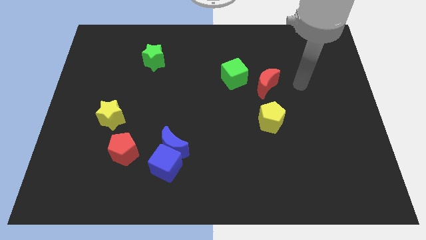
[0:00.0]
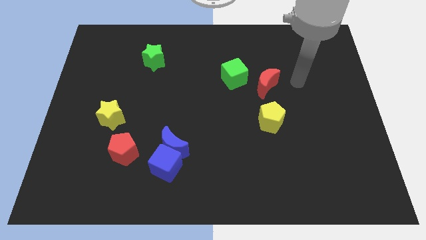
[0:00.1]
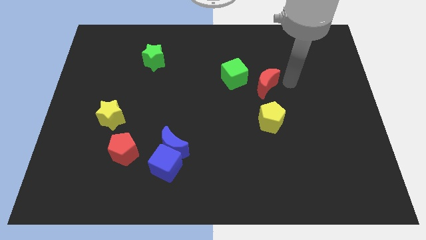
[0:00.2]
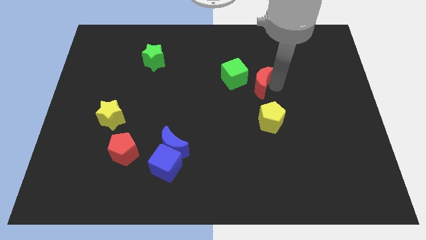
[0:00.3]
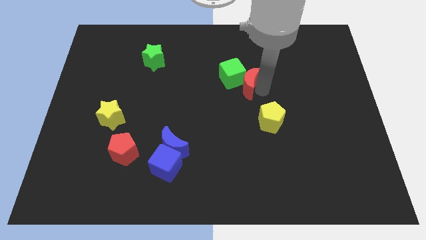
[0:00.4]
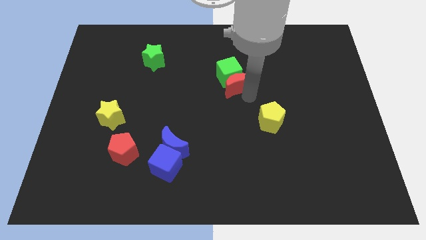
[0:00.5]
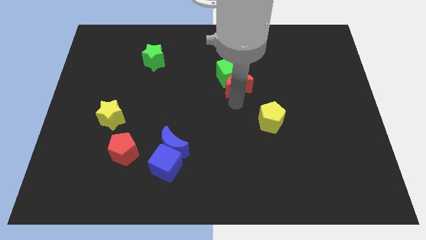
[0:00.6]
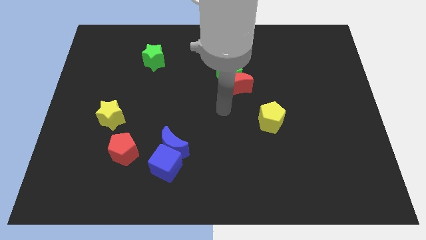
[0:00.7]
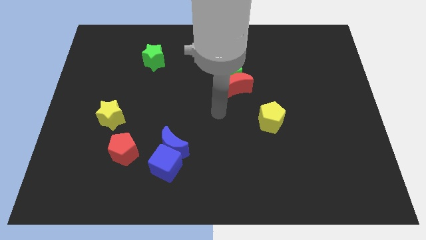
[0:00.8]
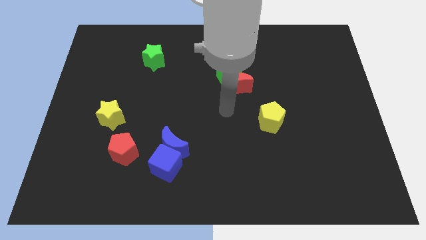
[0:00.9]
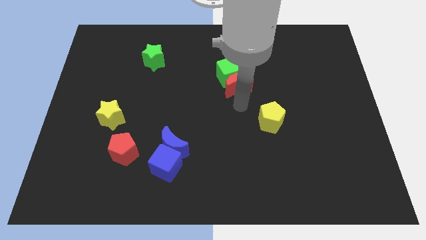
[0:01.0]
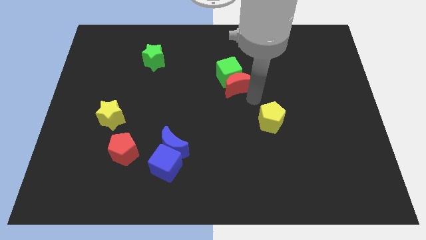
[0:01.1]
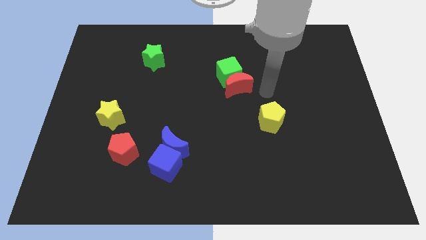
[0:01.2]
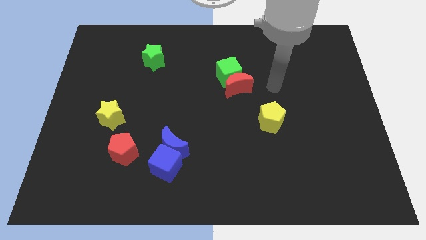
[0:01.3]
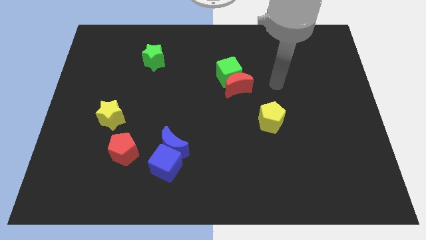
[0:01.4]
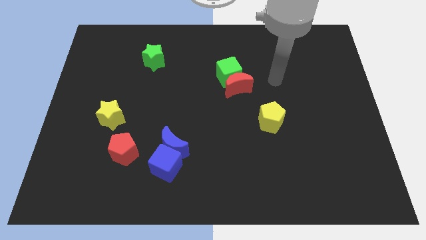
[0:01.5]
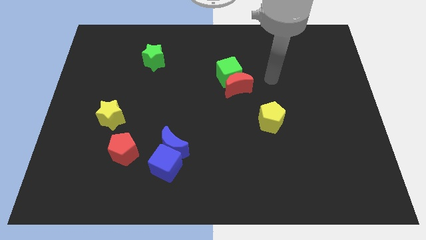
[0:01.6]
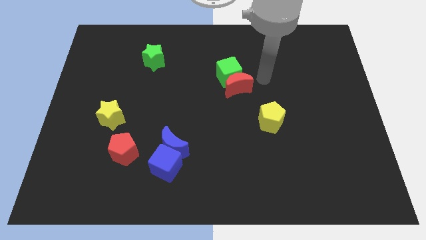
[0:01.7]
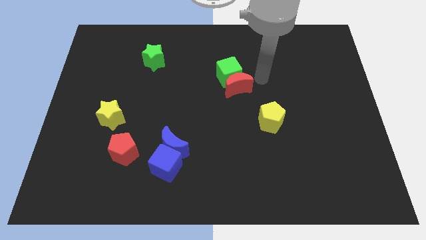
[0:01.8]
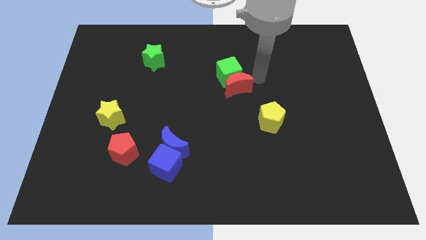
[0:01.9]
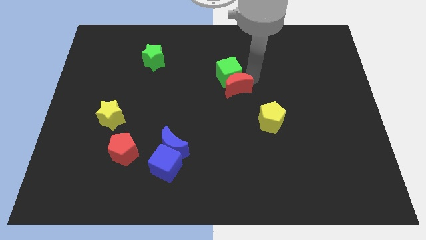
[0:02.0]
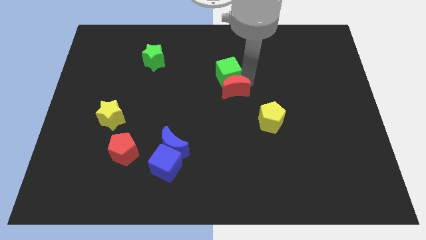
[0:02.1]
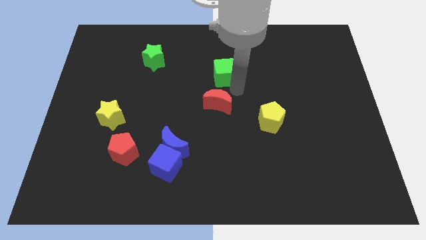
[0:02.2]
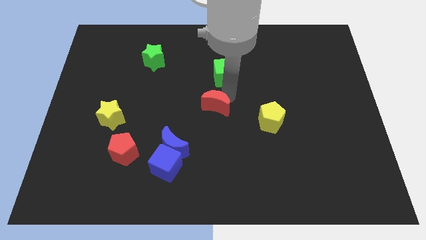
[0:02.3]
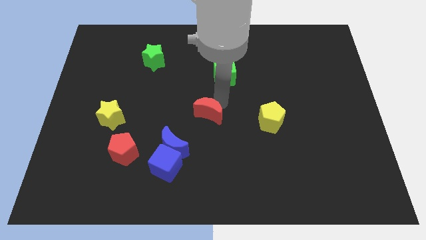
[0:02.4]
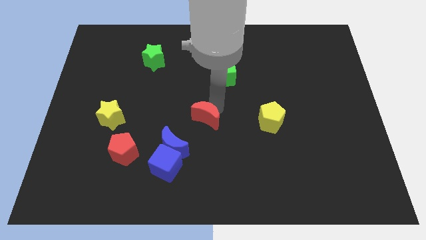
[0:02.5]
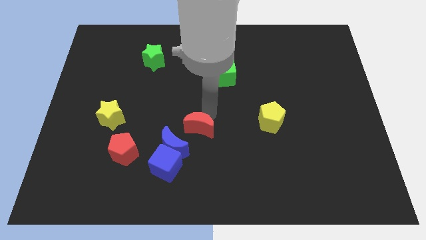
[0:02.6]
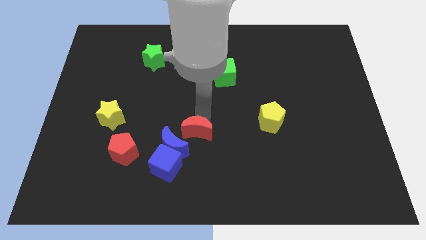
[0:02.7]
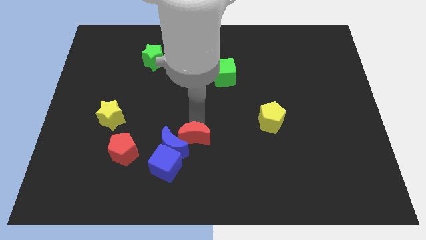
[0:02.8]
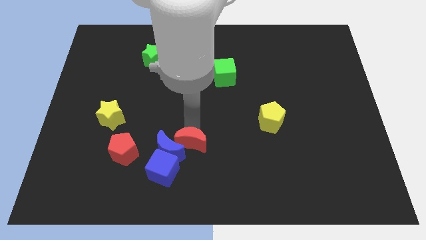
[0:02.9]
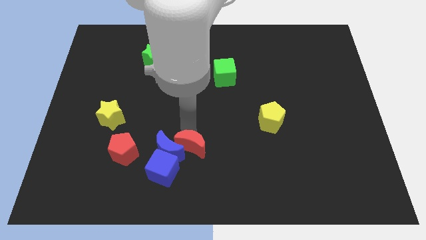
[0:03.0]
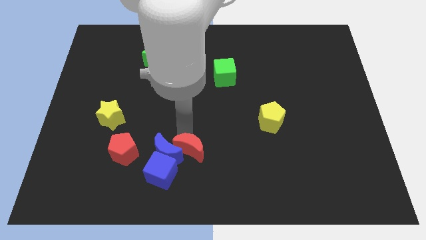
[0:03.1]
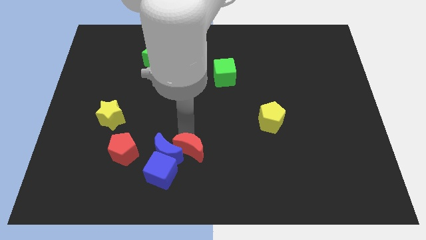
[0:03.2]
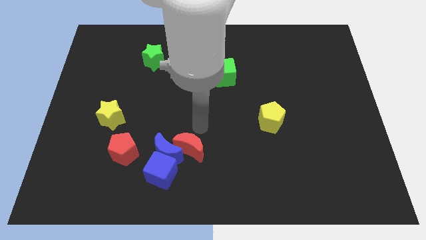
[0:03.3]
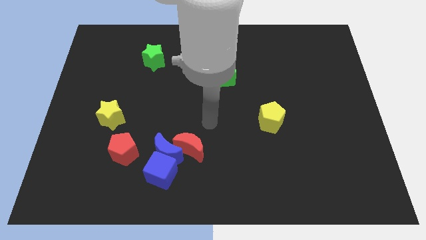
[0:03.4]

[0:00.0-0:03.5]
push the red moon into the blue moon

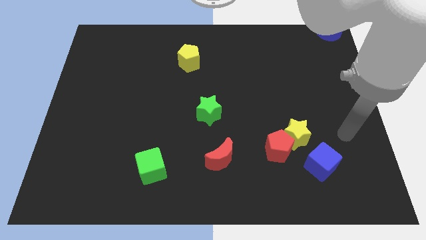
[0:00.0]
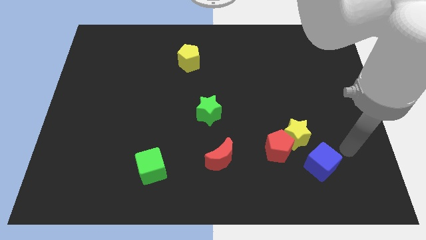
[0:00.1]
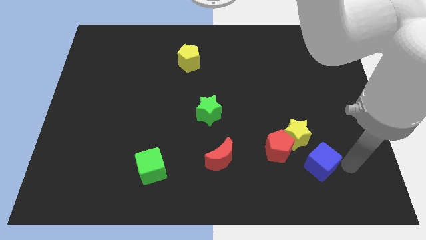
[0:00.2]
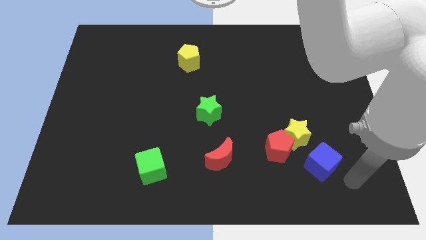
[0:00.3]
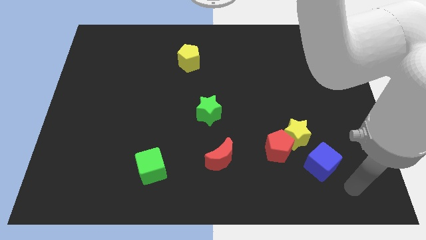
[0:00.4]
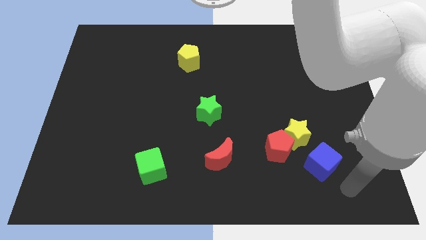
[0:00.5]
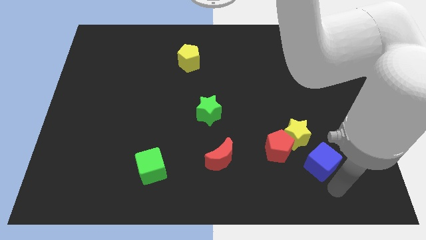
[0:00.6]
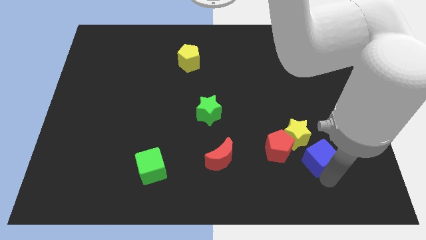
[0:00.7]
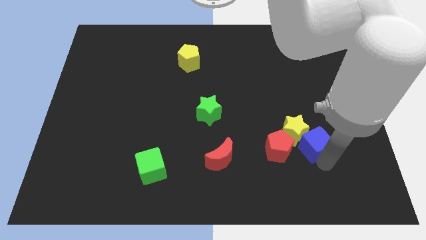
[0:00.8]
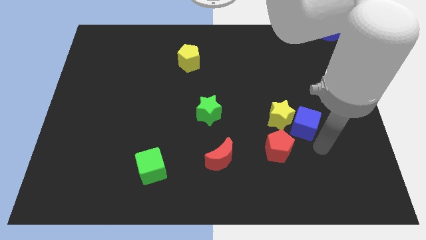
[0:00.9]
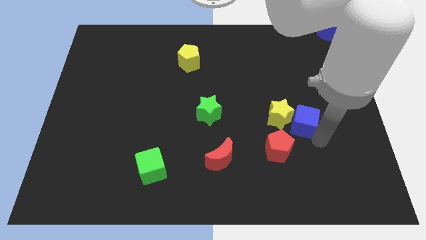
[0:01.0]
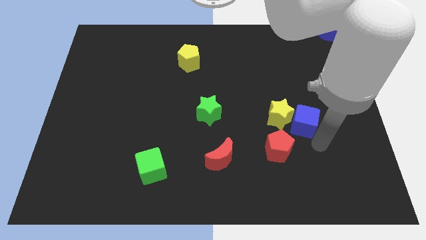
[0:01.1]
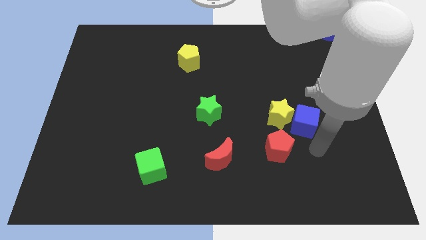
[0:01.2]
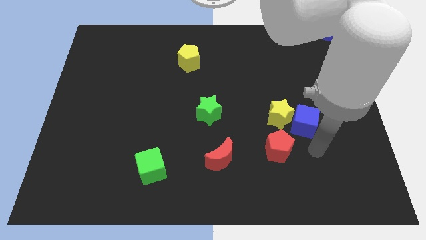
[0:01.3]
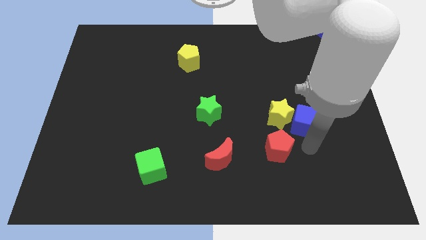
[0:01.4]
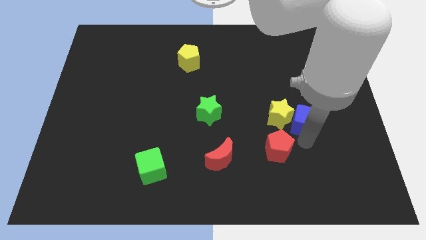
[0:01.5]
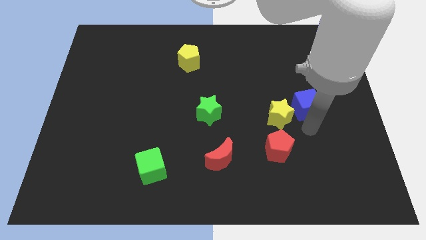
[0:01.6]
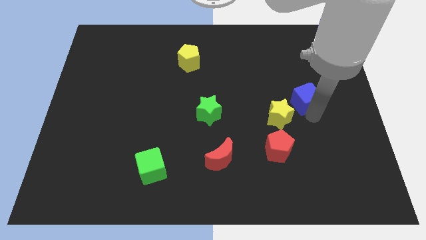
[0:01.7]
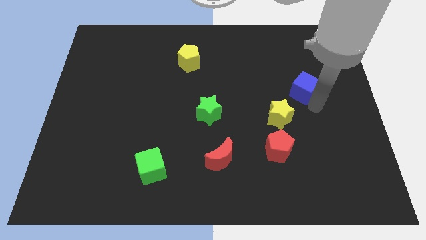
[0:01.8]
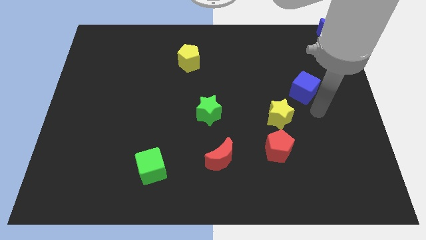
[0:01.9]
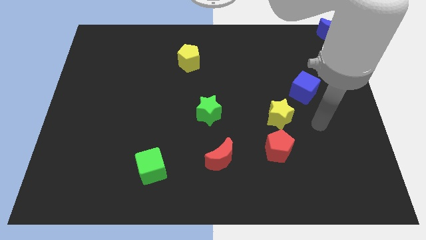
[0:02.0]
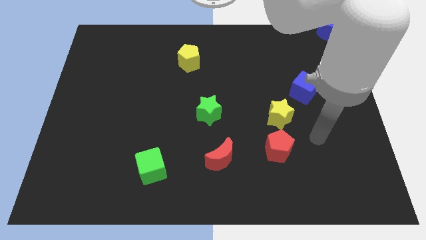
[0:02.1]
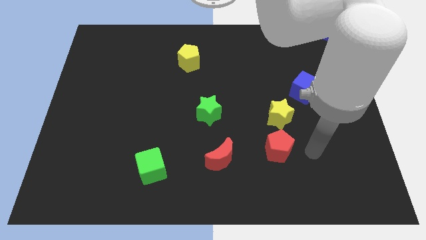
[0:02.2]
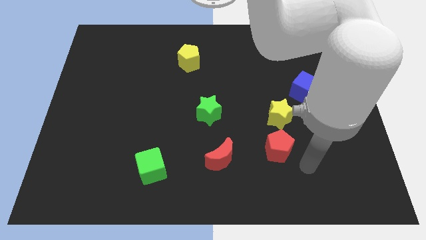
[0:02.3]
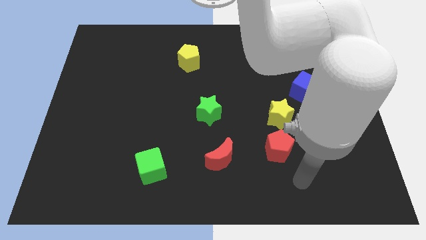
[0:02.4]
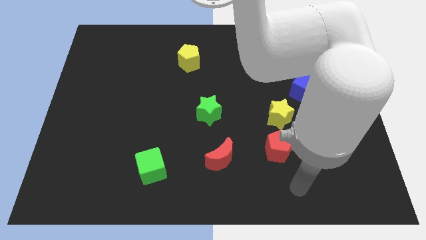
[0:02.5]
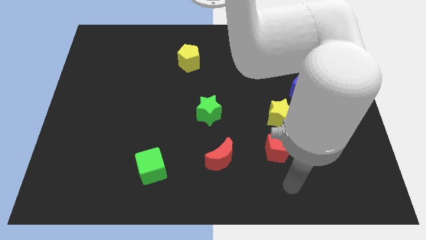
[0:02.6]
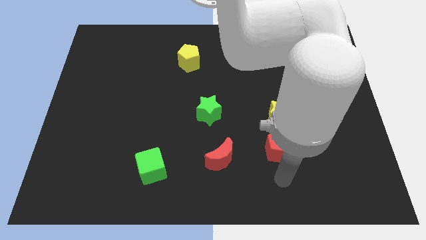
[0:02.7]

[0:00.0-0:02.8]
move the blue cube to the top right of the yellow star

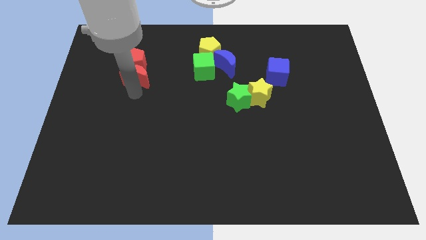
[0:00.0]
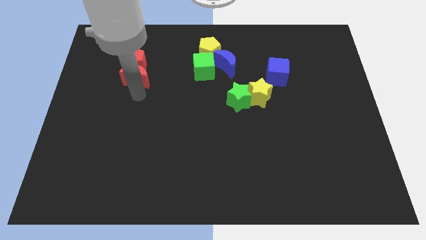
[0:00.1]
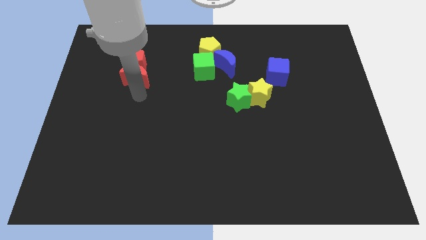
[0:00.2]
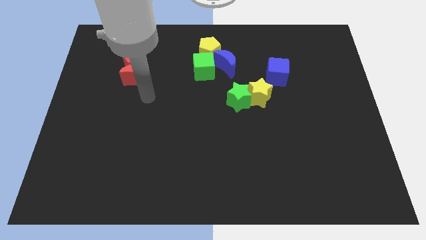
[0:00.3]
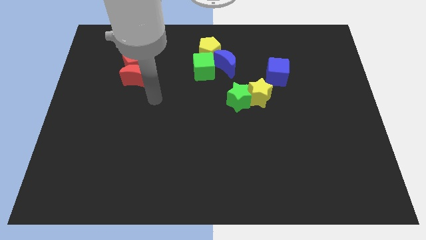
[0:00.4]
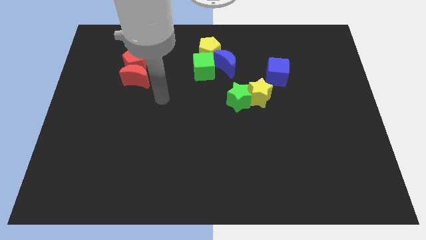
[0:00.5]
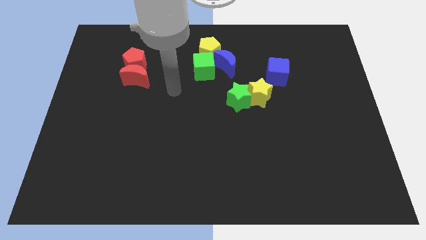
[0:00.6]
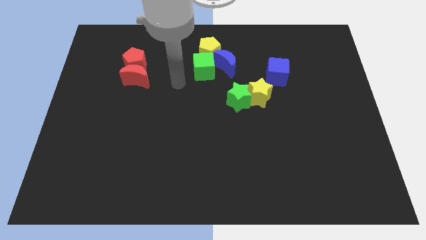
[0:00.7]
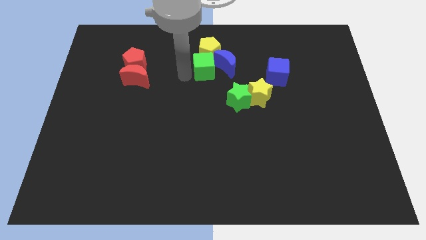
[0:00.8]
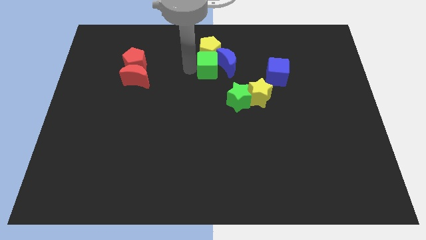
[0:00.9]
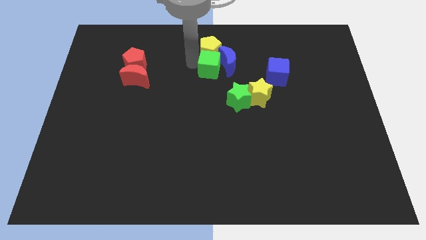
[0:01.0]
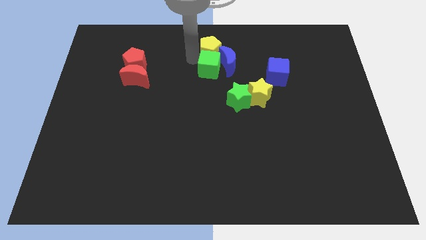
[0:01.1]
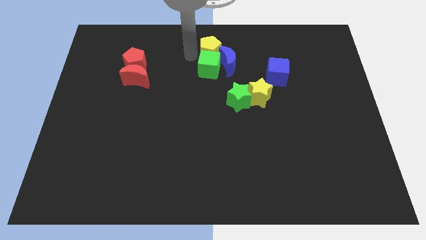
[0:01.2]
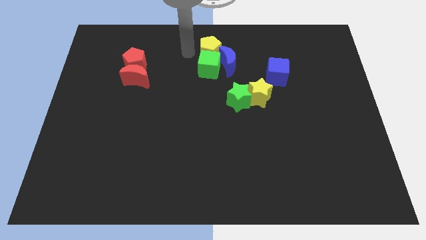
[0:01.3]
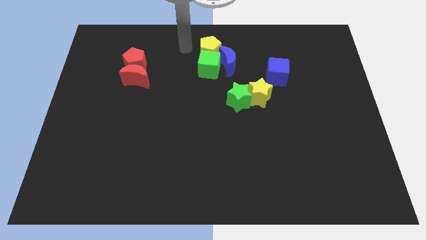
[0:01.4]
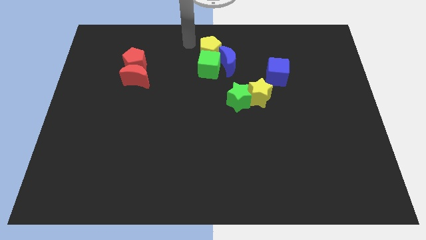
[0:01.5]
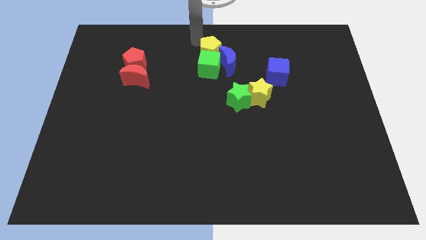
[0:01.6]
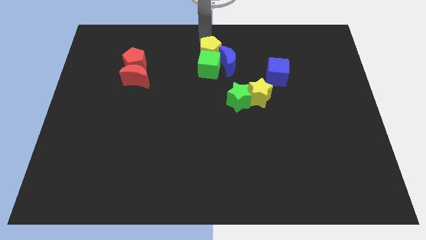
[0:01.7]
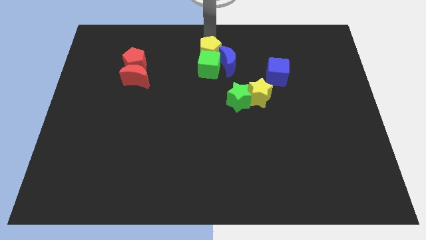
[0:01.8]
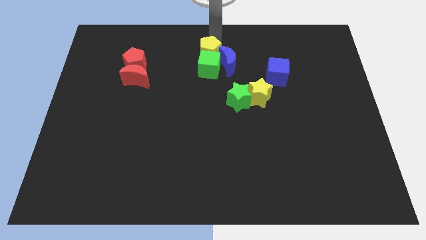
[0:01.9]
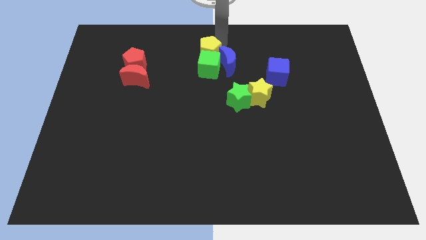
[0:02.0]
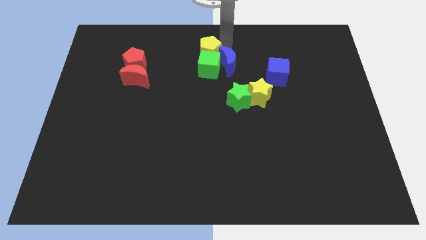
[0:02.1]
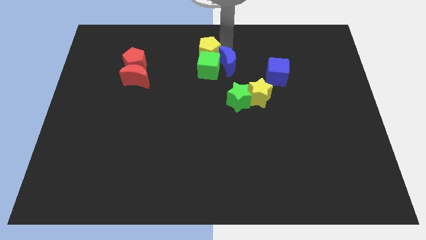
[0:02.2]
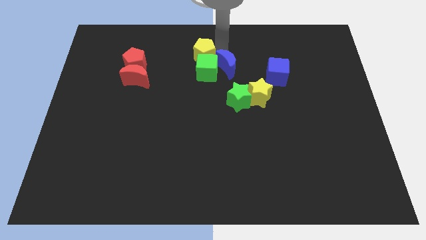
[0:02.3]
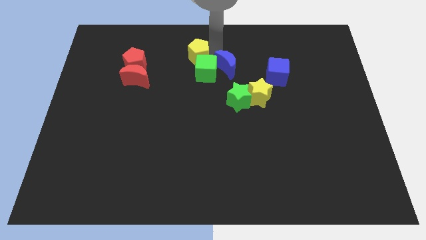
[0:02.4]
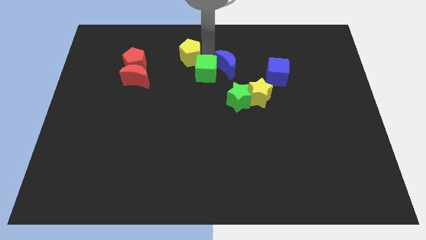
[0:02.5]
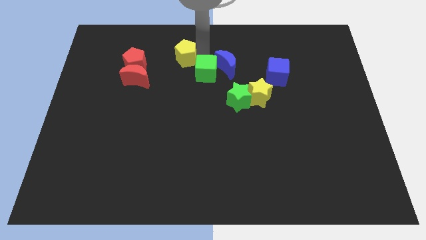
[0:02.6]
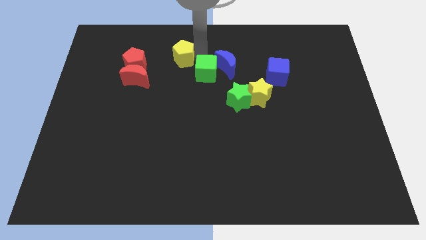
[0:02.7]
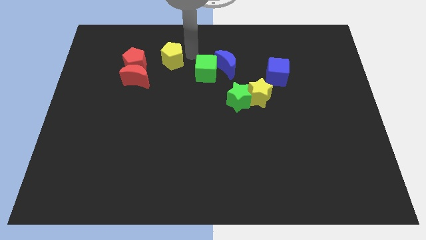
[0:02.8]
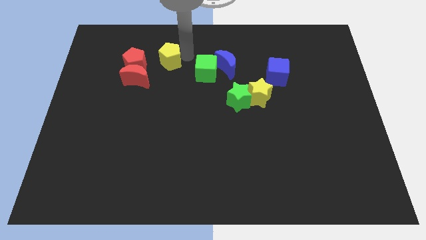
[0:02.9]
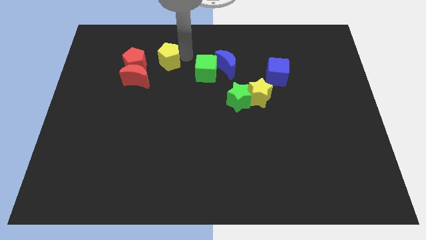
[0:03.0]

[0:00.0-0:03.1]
slightly move the yellow pentagon towards the left
